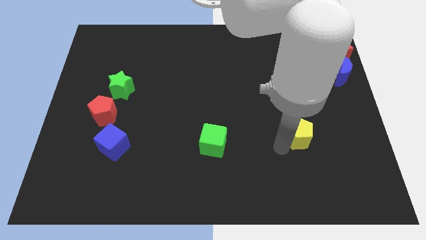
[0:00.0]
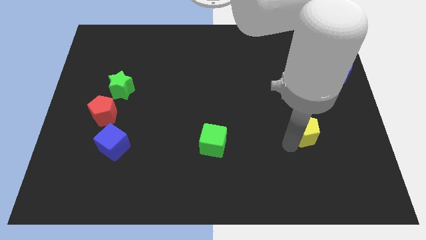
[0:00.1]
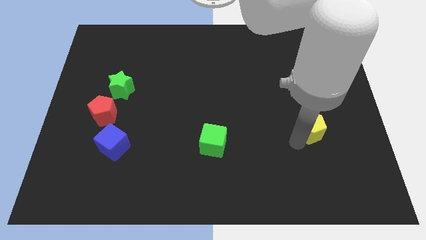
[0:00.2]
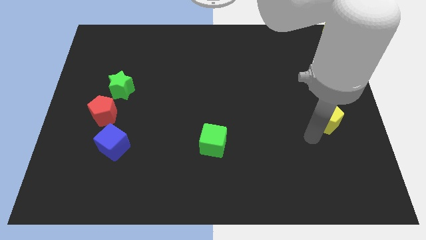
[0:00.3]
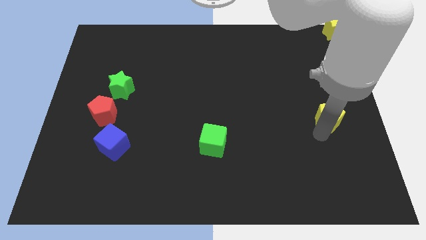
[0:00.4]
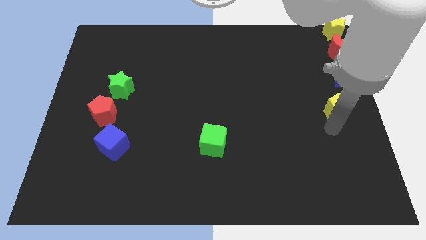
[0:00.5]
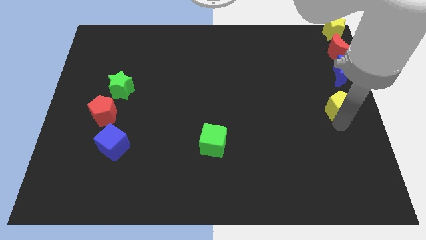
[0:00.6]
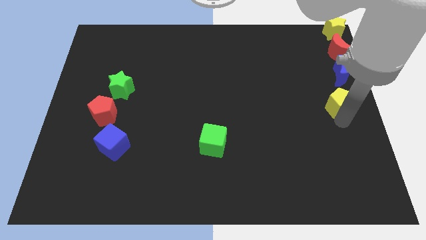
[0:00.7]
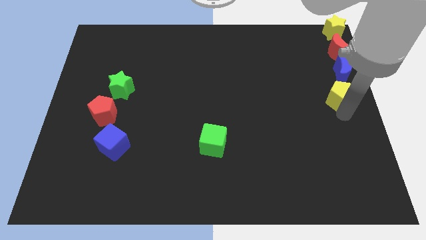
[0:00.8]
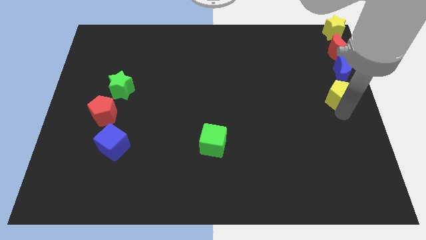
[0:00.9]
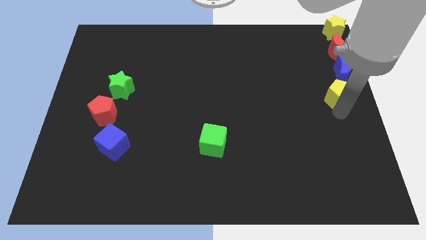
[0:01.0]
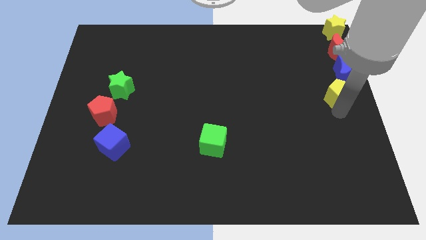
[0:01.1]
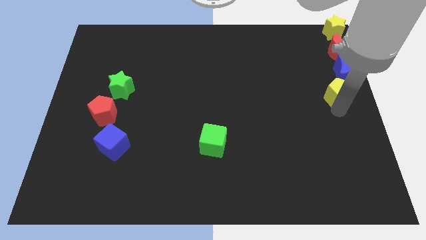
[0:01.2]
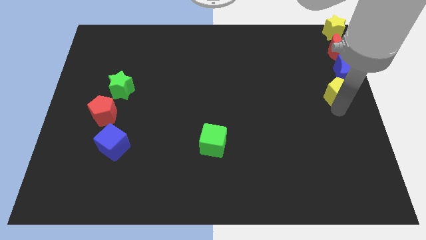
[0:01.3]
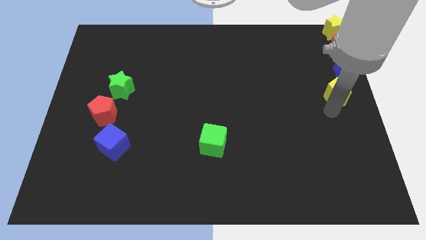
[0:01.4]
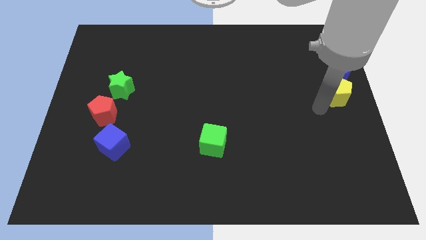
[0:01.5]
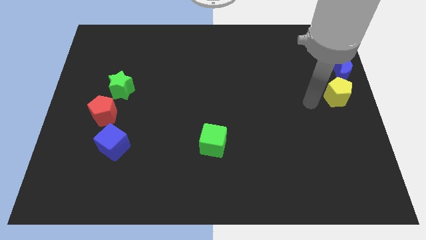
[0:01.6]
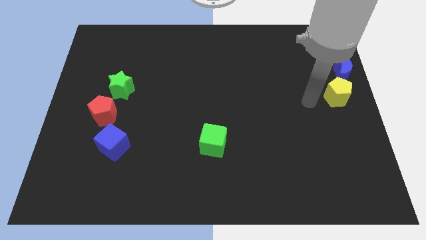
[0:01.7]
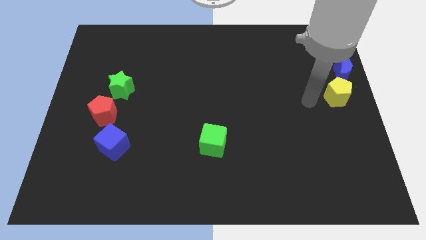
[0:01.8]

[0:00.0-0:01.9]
place the yellow pentagon below the blue moon

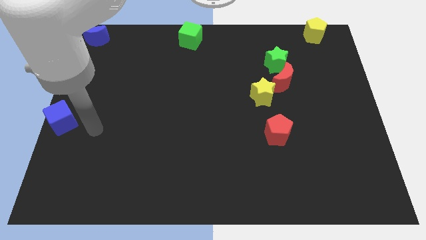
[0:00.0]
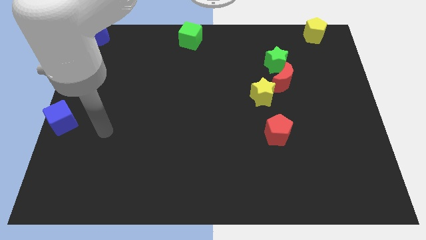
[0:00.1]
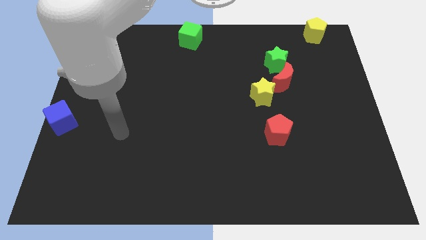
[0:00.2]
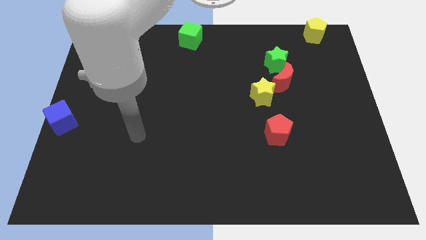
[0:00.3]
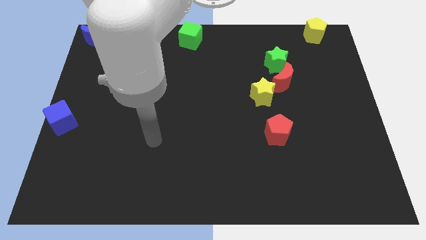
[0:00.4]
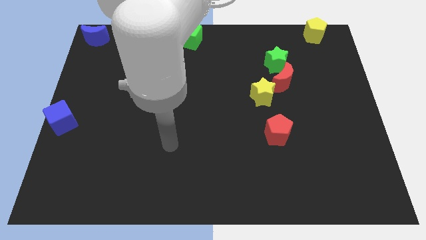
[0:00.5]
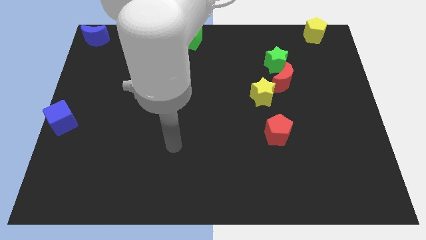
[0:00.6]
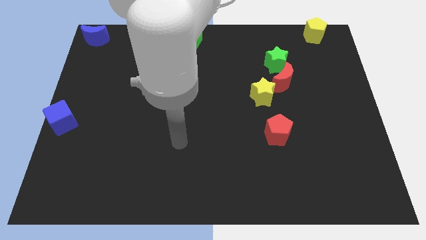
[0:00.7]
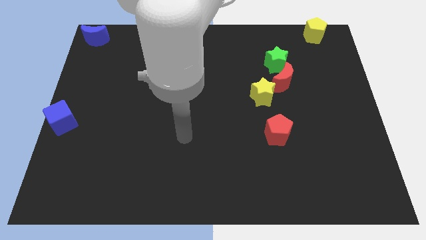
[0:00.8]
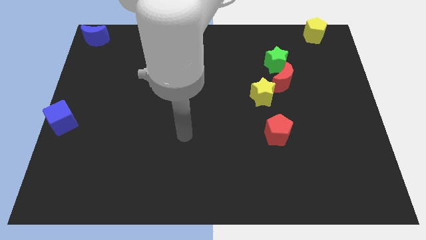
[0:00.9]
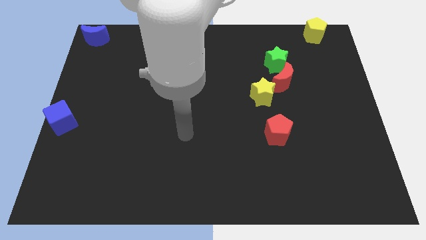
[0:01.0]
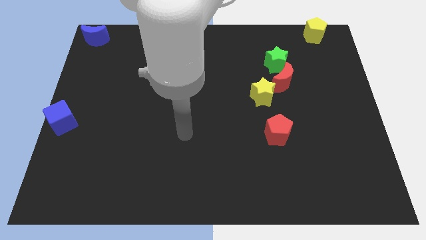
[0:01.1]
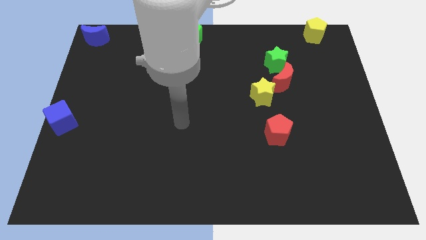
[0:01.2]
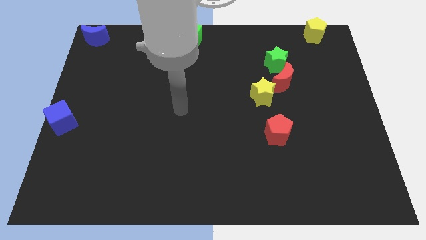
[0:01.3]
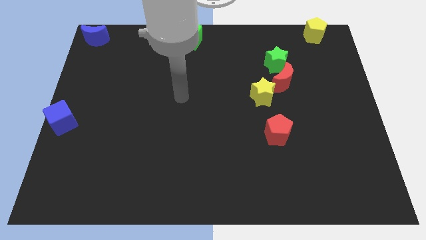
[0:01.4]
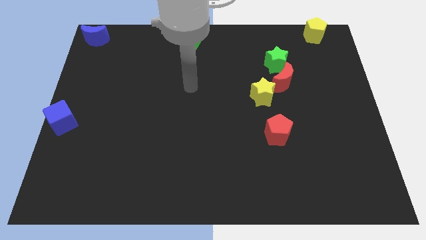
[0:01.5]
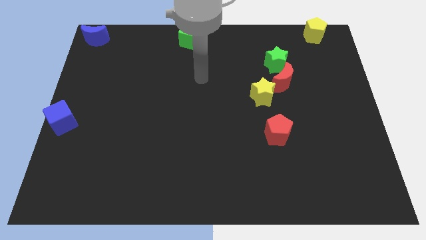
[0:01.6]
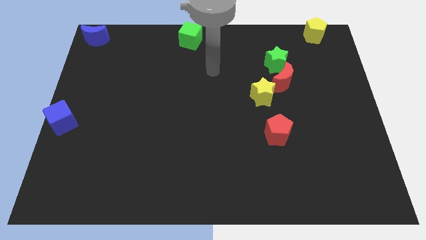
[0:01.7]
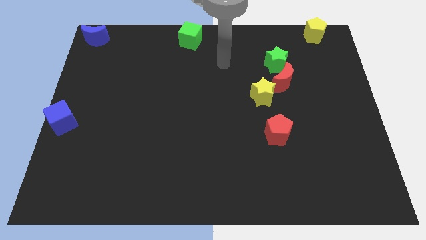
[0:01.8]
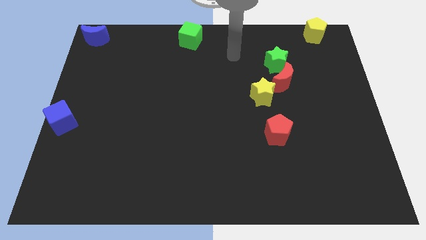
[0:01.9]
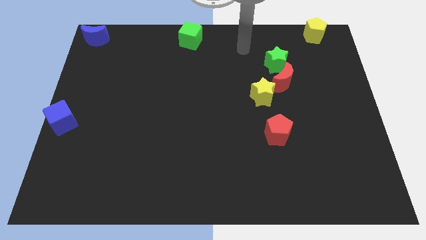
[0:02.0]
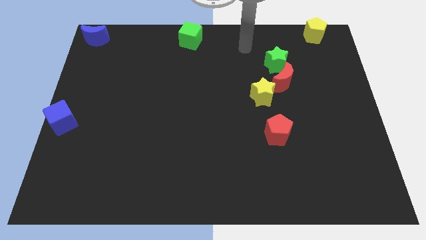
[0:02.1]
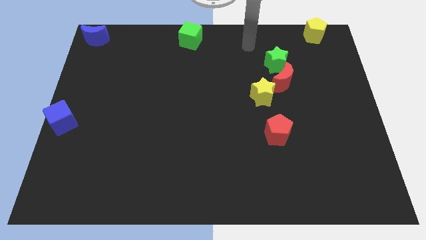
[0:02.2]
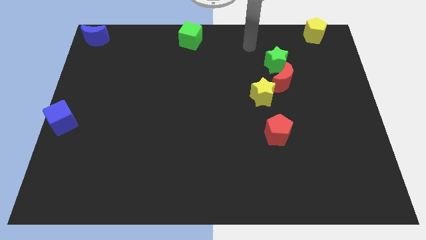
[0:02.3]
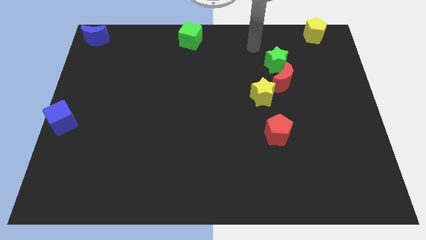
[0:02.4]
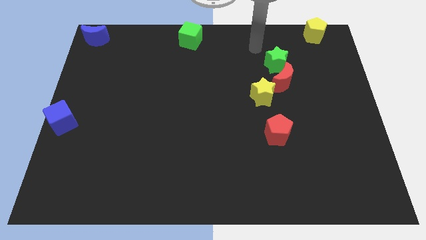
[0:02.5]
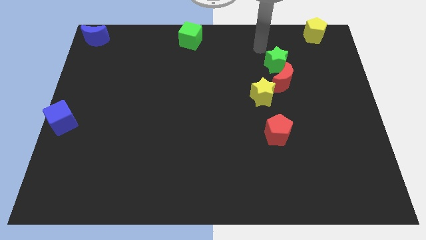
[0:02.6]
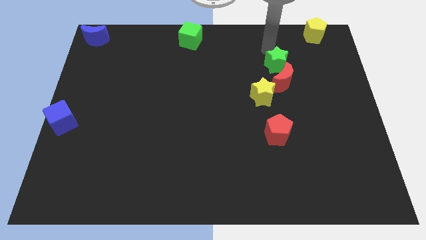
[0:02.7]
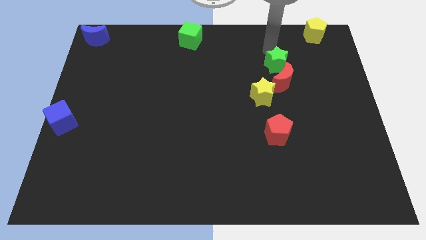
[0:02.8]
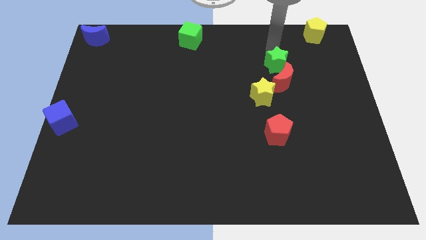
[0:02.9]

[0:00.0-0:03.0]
point your arm at the top of the green star

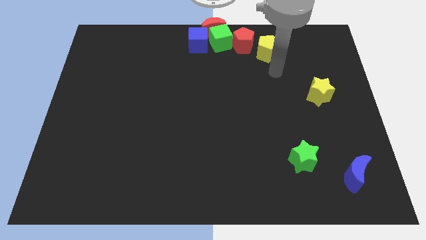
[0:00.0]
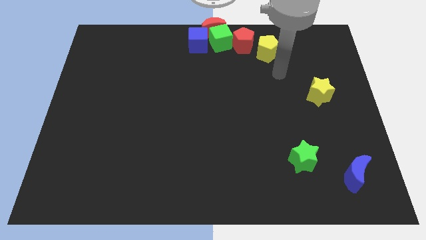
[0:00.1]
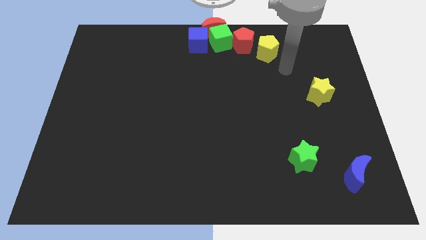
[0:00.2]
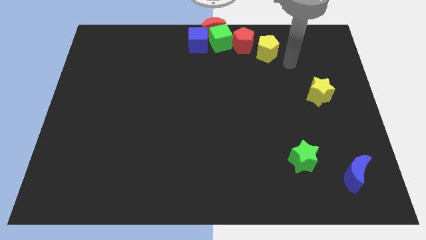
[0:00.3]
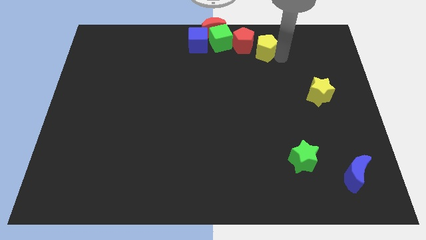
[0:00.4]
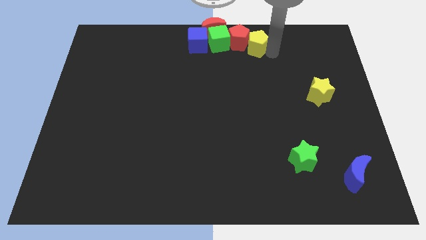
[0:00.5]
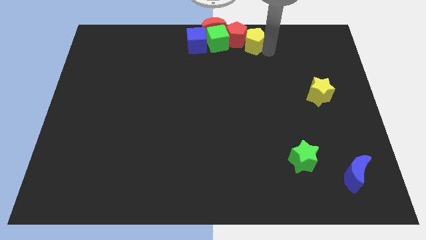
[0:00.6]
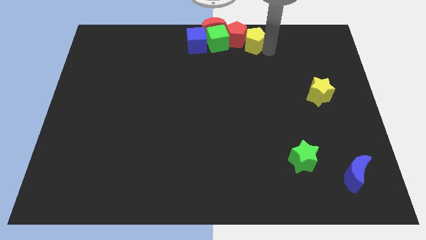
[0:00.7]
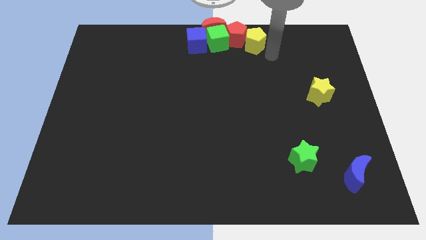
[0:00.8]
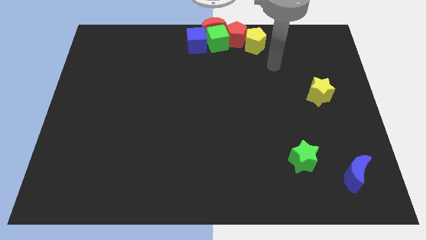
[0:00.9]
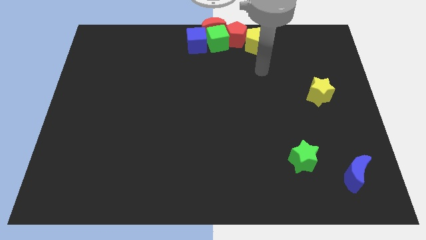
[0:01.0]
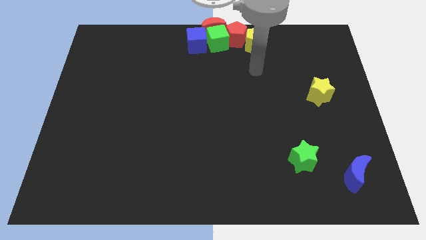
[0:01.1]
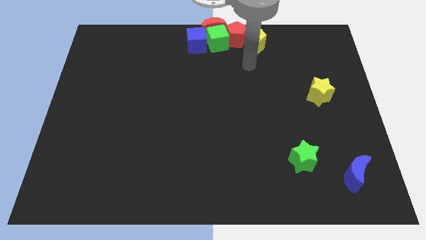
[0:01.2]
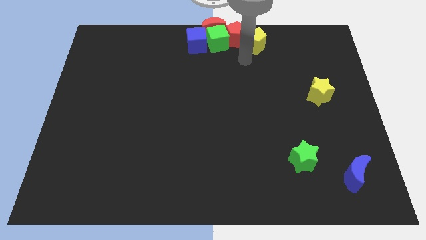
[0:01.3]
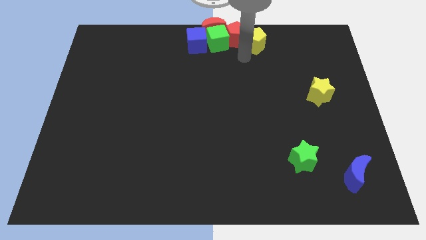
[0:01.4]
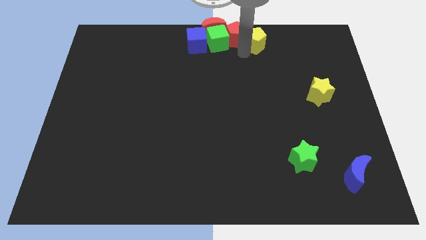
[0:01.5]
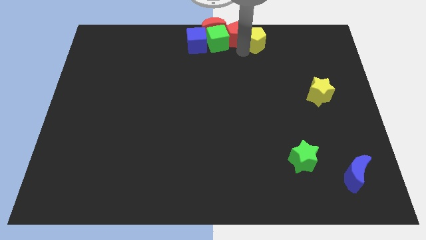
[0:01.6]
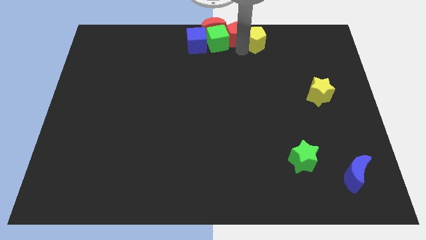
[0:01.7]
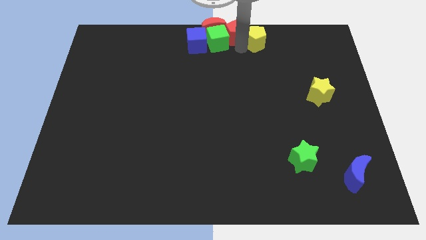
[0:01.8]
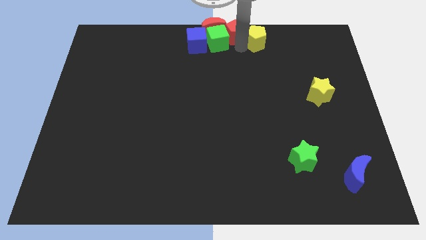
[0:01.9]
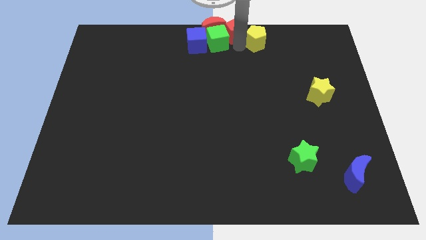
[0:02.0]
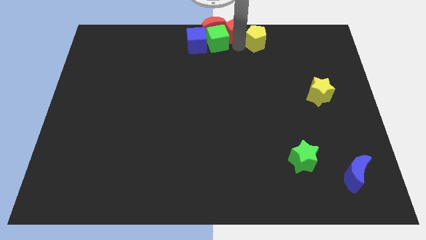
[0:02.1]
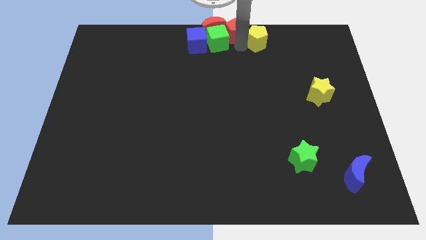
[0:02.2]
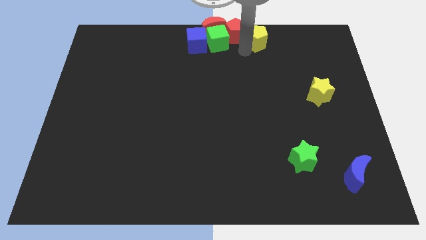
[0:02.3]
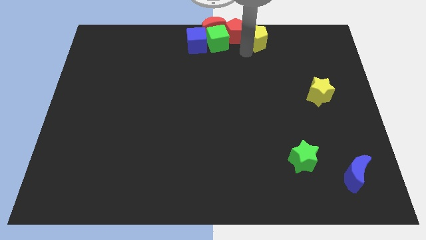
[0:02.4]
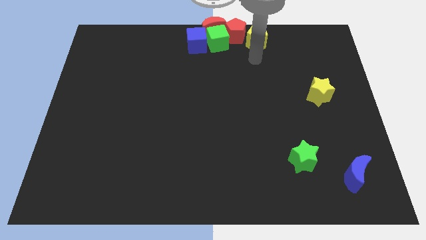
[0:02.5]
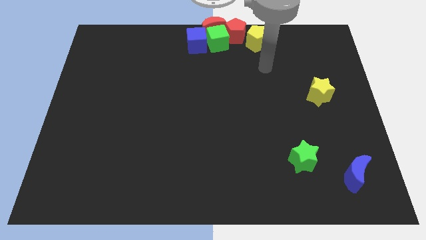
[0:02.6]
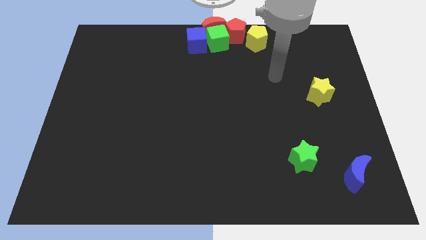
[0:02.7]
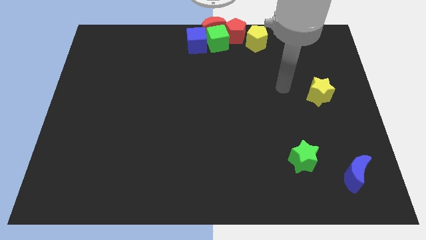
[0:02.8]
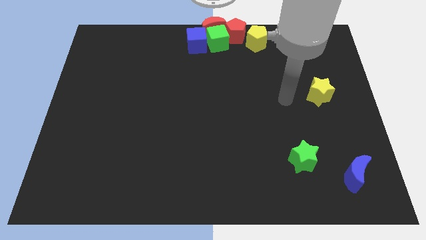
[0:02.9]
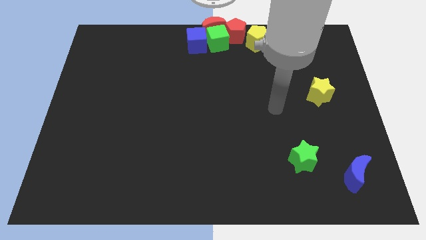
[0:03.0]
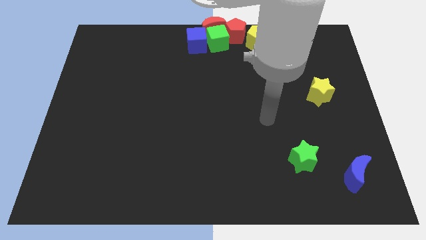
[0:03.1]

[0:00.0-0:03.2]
push the yellow pentagon near the red pentagon

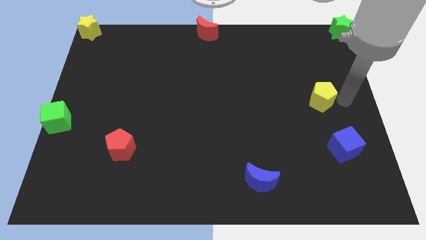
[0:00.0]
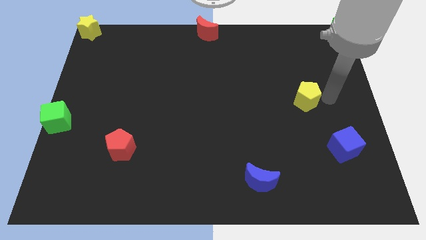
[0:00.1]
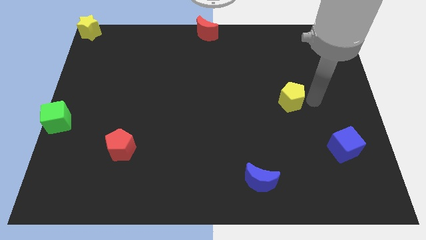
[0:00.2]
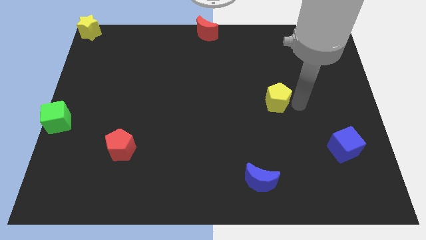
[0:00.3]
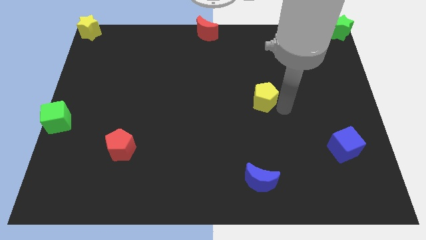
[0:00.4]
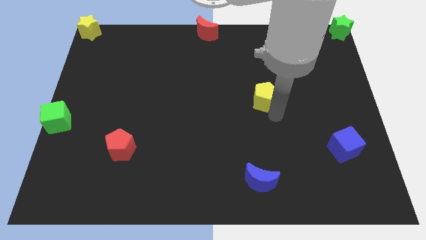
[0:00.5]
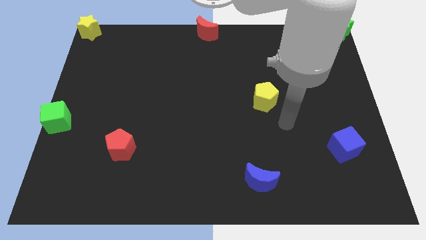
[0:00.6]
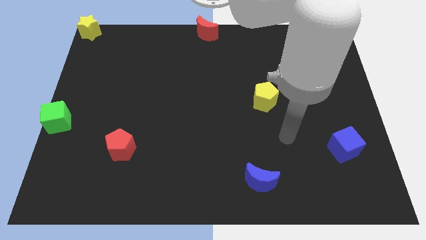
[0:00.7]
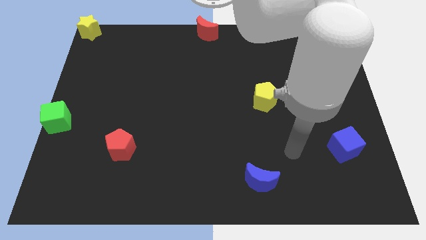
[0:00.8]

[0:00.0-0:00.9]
adjust the place of yellow pentagon to the center of the board
